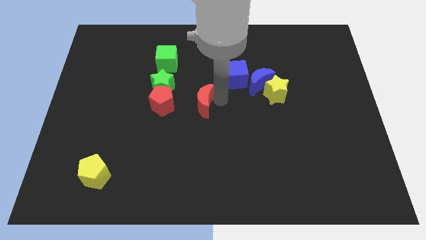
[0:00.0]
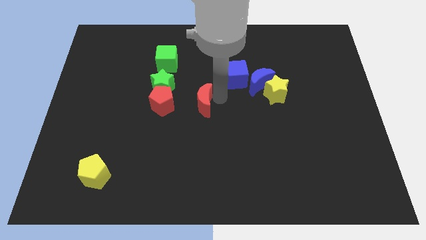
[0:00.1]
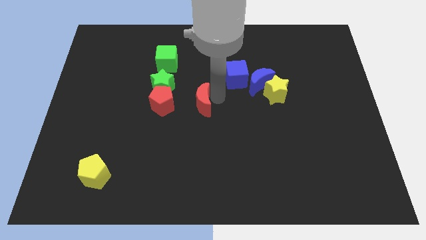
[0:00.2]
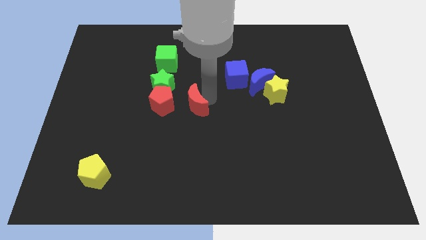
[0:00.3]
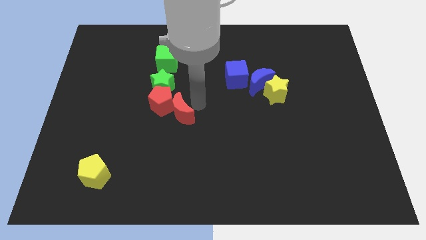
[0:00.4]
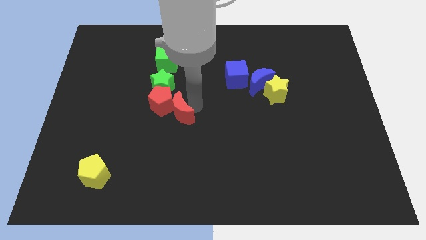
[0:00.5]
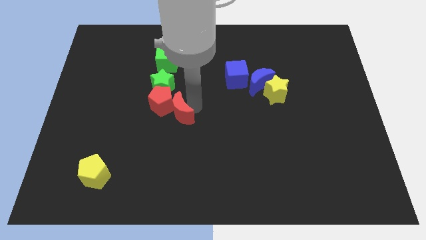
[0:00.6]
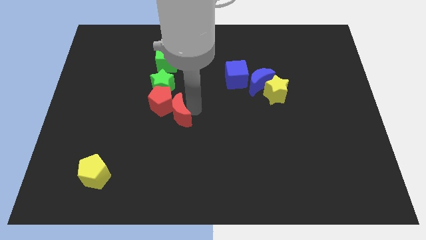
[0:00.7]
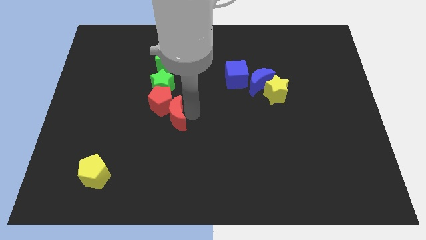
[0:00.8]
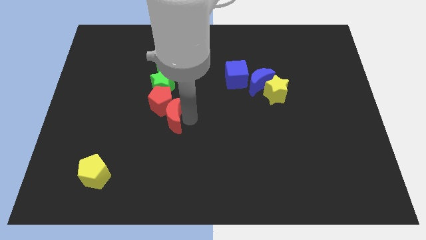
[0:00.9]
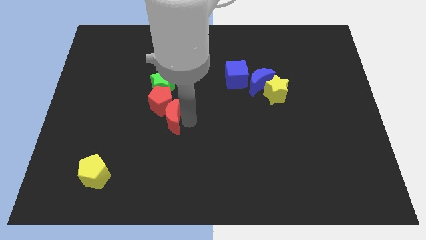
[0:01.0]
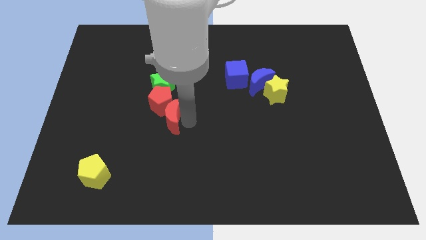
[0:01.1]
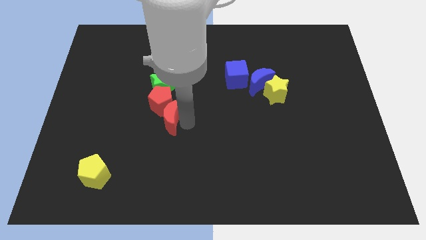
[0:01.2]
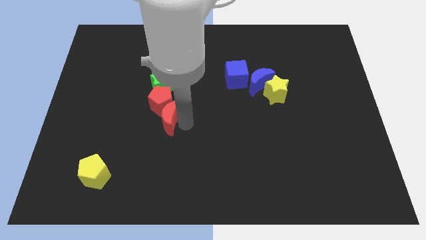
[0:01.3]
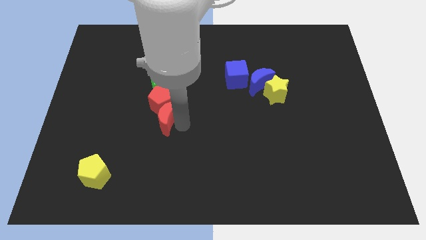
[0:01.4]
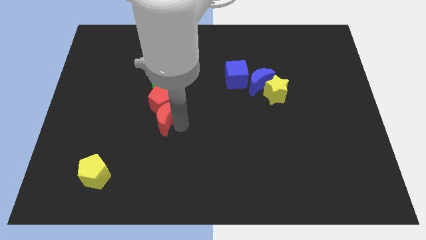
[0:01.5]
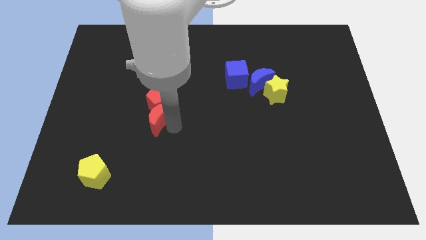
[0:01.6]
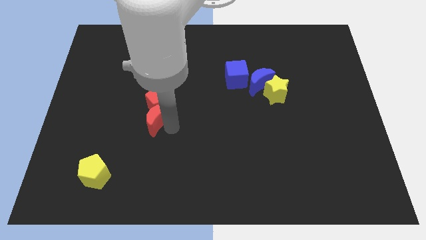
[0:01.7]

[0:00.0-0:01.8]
push red crescent below red pentagon

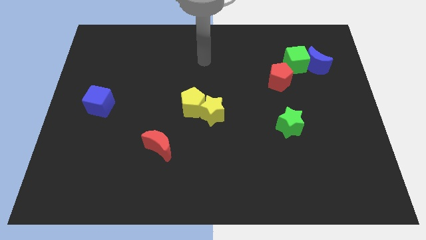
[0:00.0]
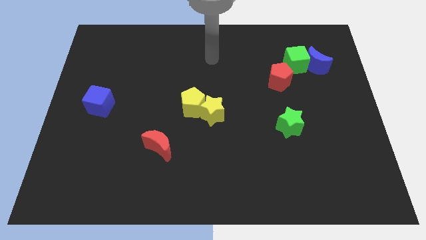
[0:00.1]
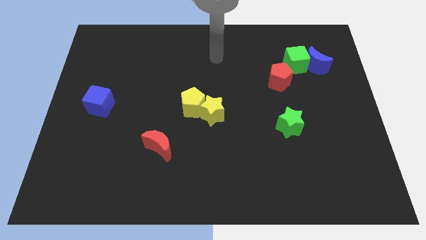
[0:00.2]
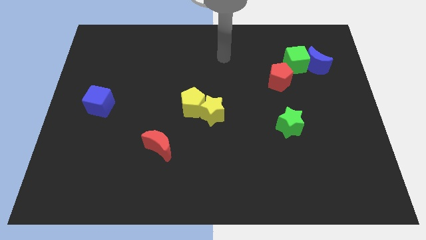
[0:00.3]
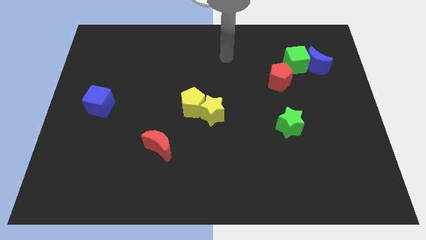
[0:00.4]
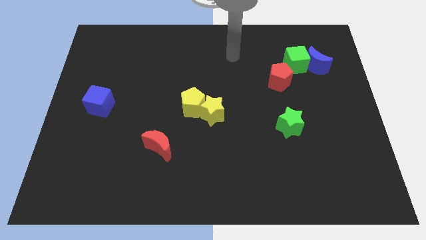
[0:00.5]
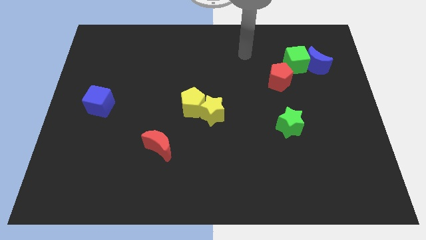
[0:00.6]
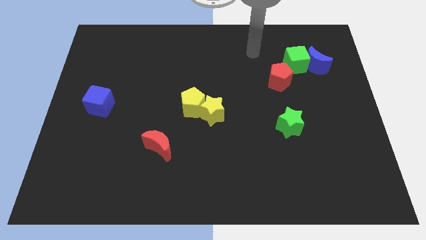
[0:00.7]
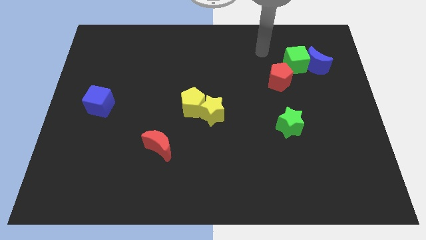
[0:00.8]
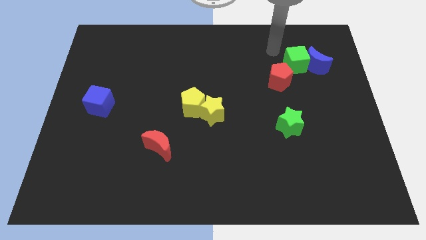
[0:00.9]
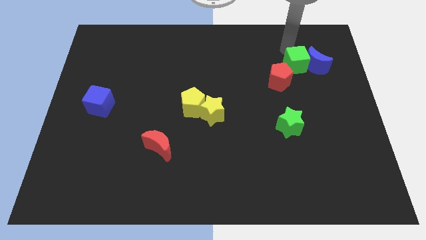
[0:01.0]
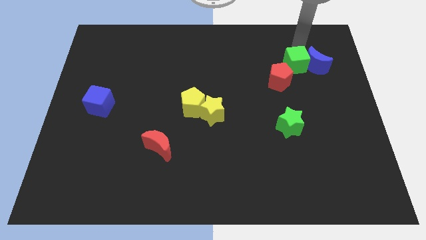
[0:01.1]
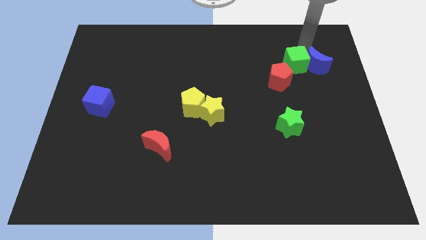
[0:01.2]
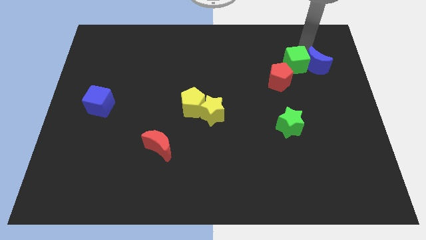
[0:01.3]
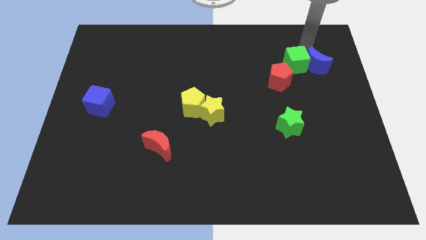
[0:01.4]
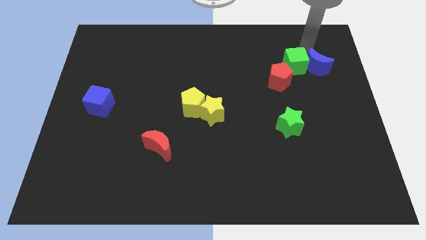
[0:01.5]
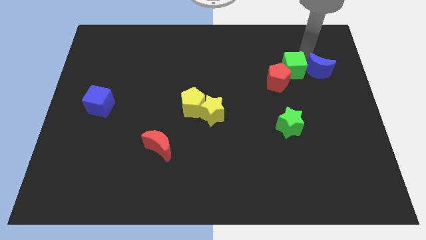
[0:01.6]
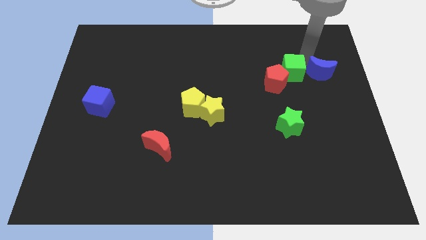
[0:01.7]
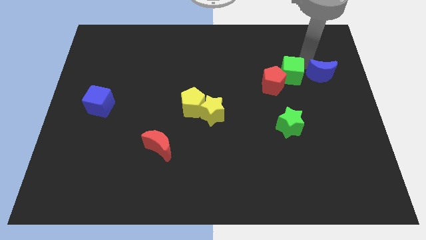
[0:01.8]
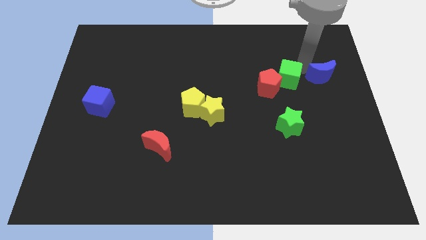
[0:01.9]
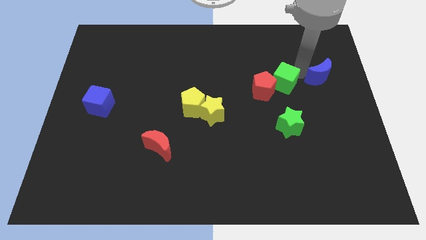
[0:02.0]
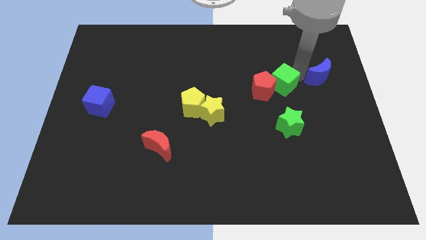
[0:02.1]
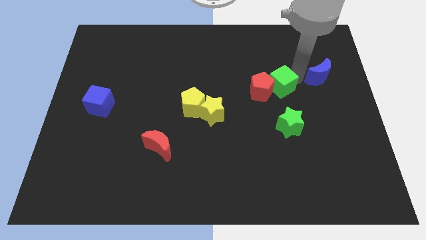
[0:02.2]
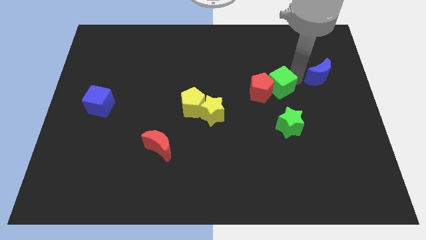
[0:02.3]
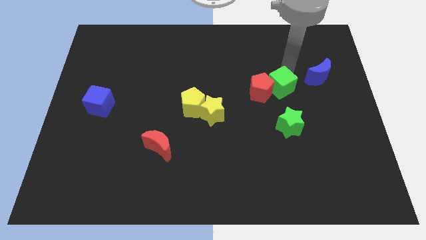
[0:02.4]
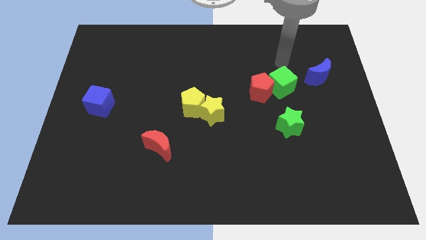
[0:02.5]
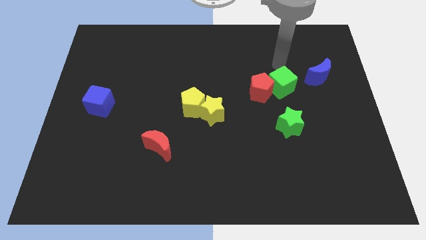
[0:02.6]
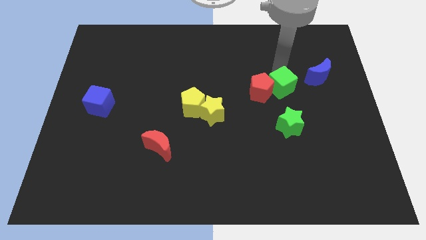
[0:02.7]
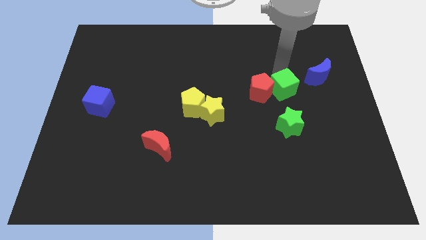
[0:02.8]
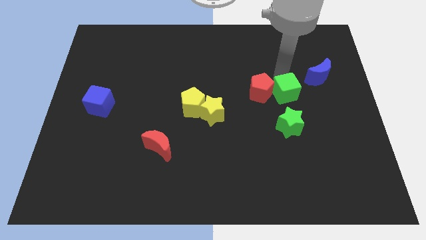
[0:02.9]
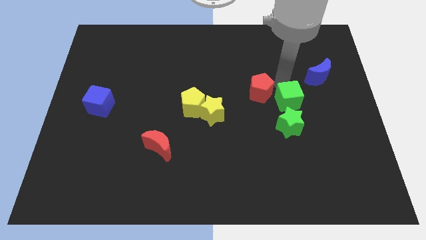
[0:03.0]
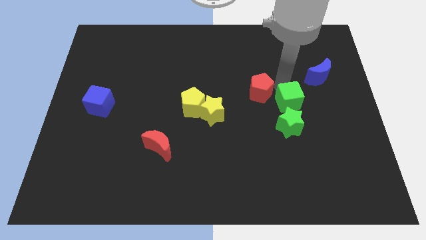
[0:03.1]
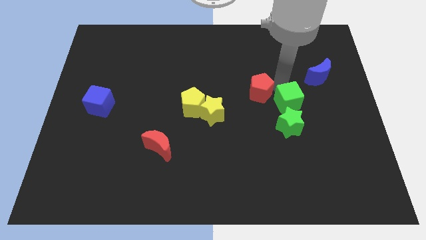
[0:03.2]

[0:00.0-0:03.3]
split the green cube and blue moon

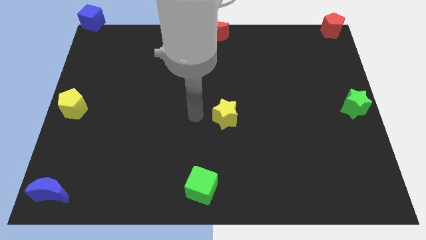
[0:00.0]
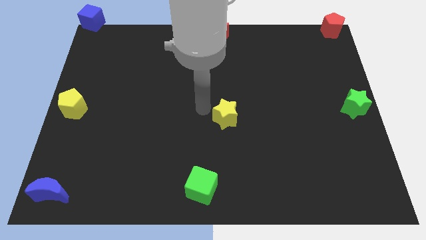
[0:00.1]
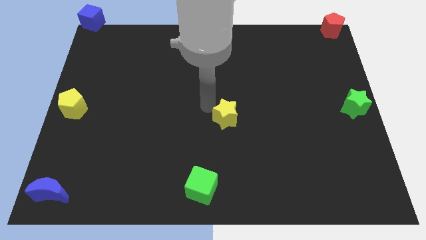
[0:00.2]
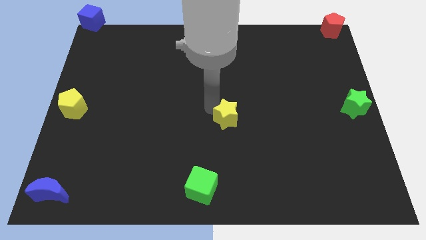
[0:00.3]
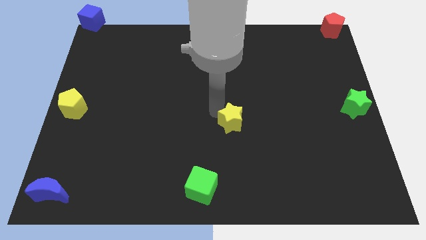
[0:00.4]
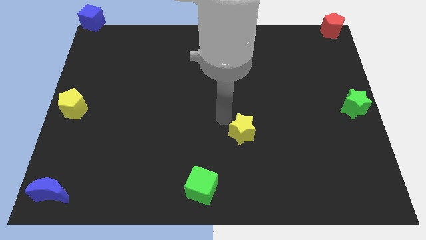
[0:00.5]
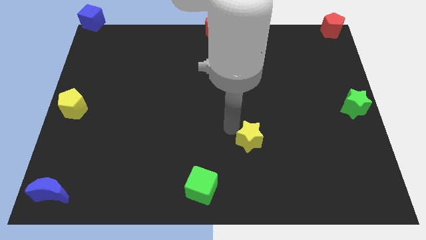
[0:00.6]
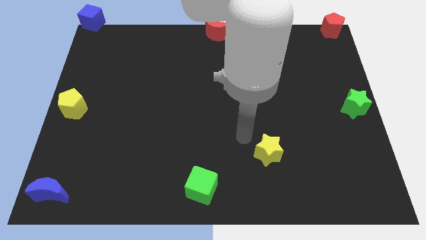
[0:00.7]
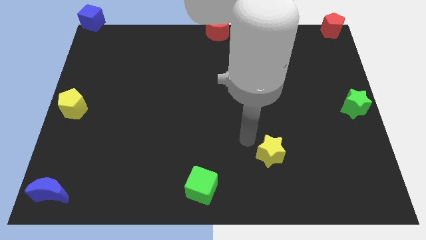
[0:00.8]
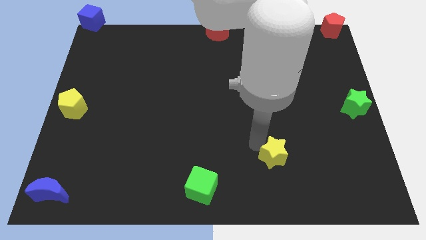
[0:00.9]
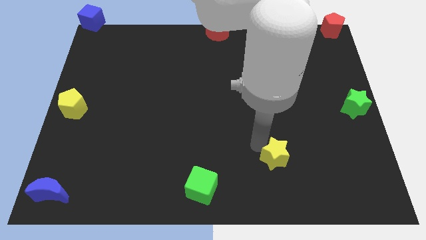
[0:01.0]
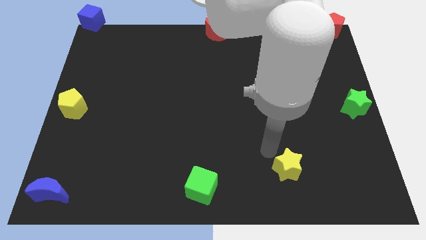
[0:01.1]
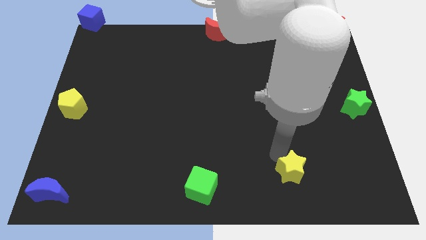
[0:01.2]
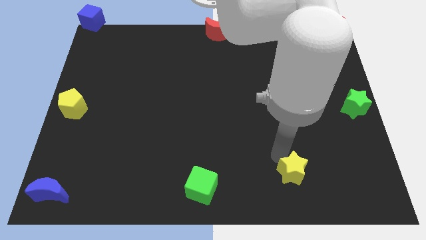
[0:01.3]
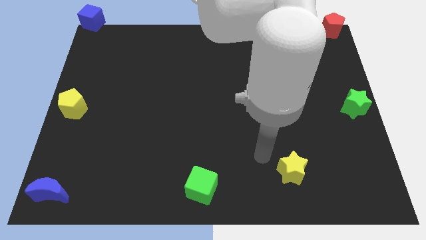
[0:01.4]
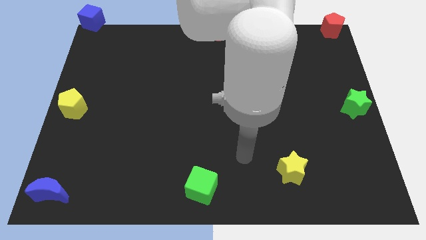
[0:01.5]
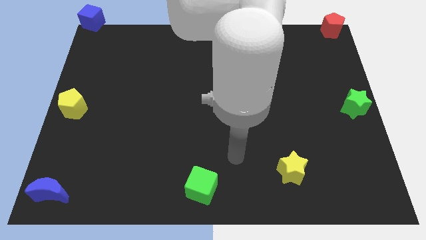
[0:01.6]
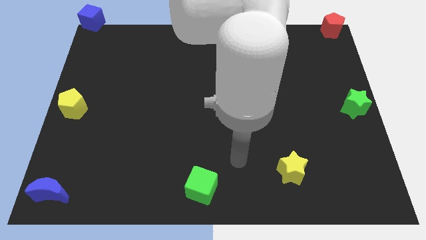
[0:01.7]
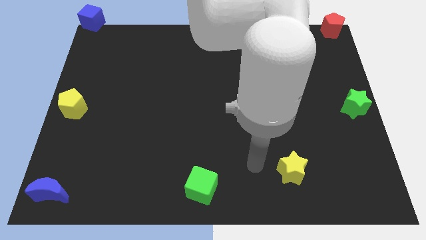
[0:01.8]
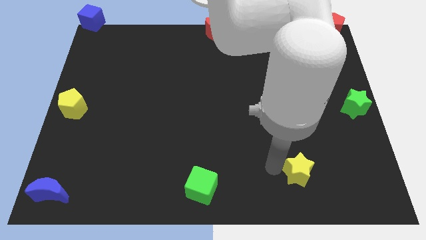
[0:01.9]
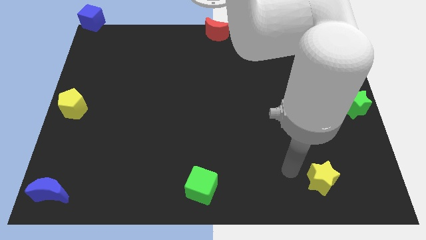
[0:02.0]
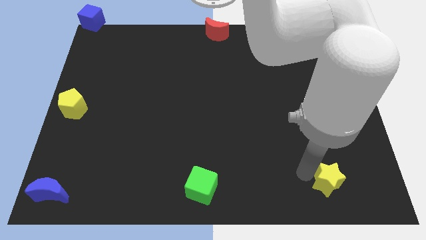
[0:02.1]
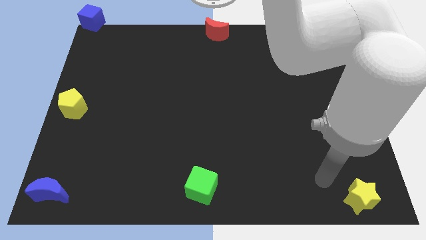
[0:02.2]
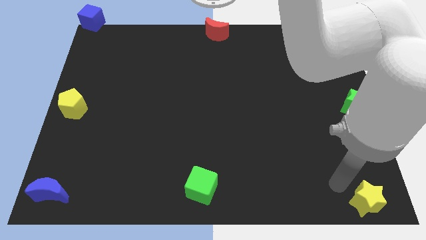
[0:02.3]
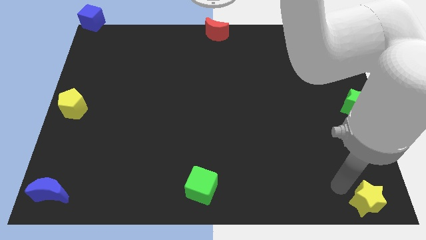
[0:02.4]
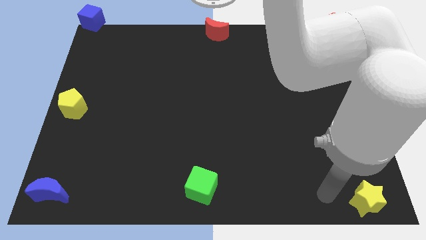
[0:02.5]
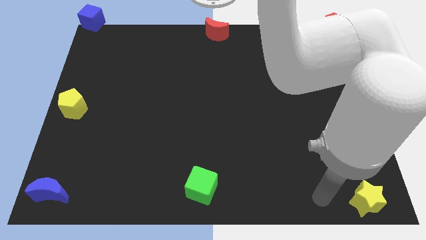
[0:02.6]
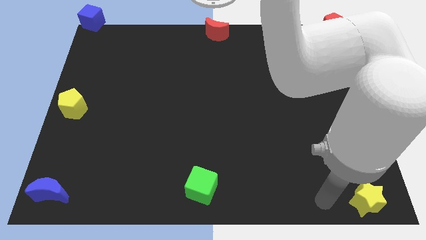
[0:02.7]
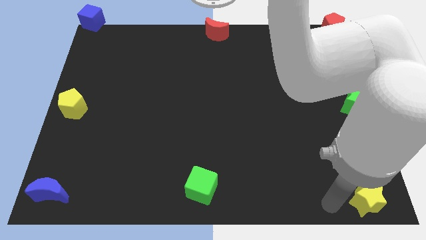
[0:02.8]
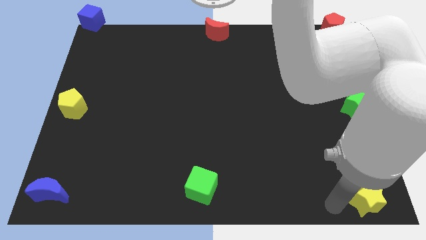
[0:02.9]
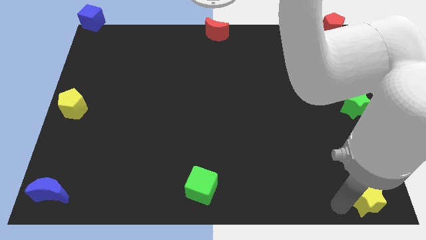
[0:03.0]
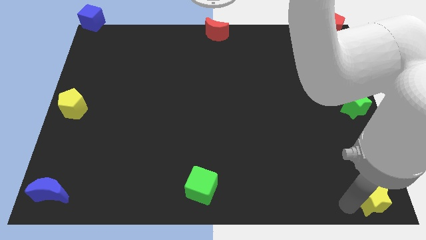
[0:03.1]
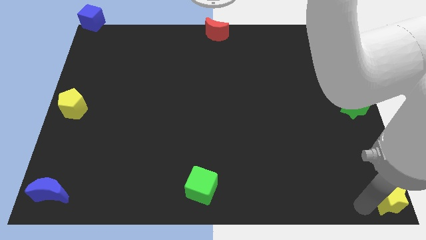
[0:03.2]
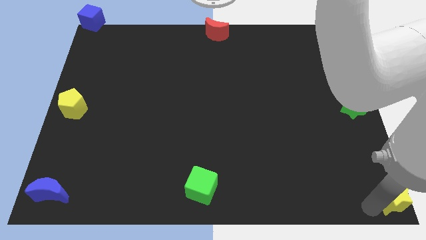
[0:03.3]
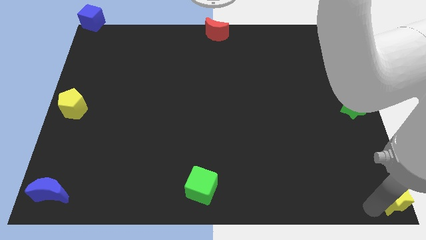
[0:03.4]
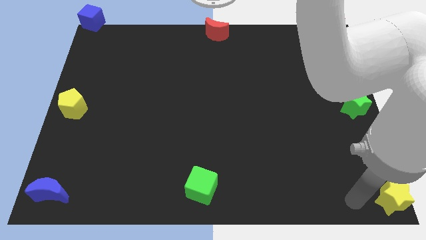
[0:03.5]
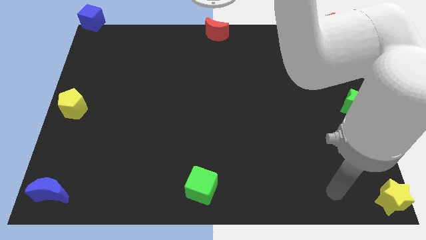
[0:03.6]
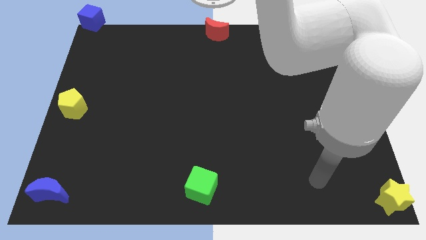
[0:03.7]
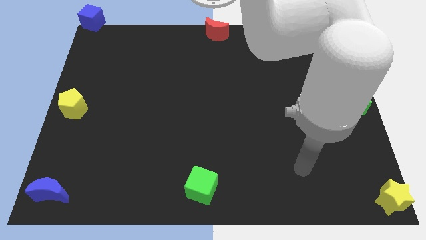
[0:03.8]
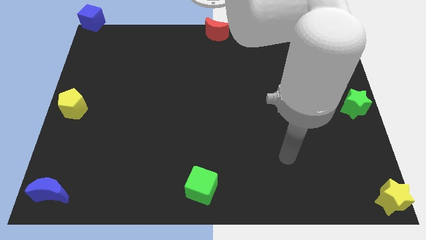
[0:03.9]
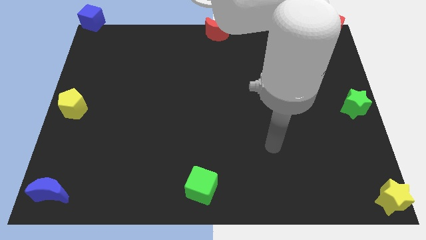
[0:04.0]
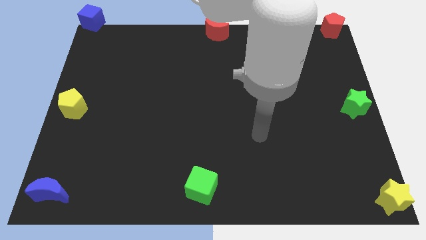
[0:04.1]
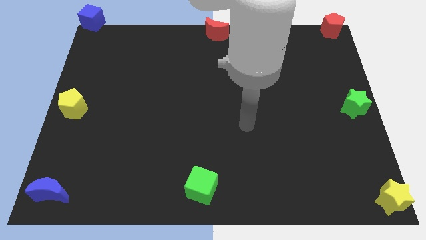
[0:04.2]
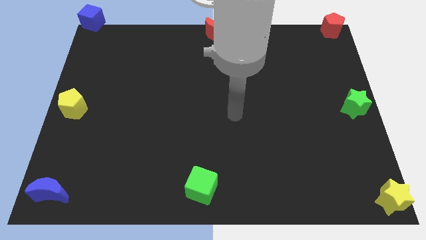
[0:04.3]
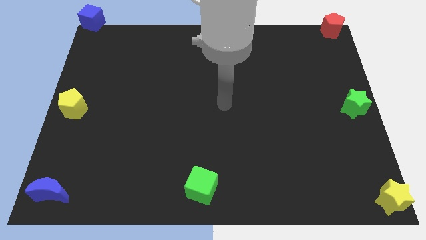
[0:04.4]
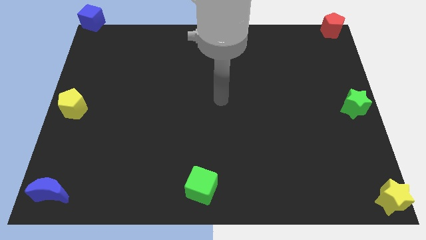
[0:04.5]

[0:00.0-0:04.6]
push the yellow star to the bottom right corner of the board
